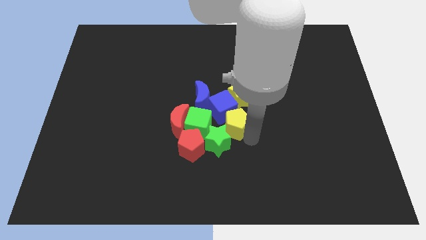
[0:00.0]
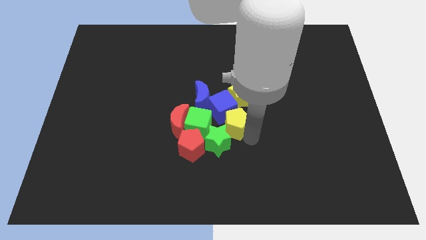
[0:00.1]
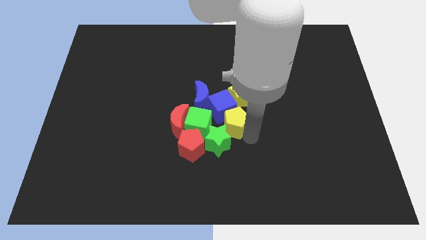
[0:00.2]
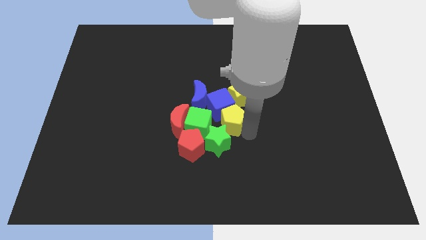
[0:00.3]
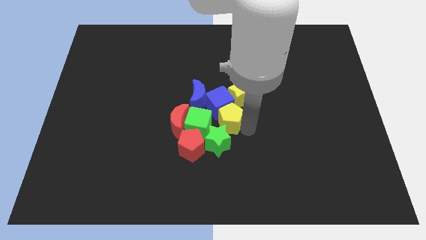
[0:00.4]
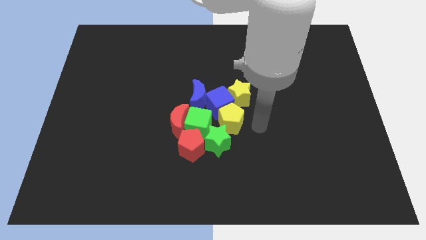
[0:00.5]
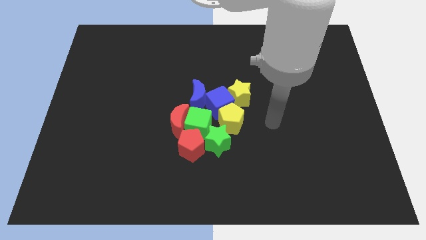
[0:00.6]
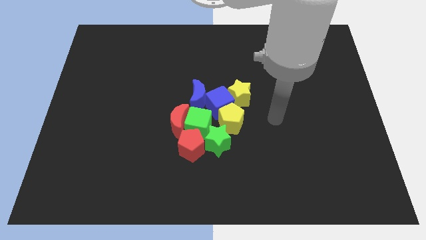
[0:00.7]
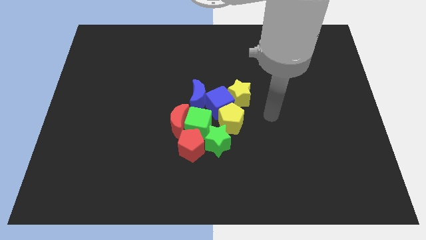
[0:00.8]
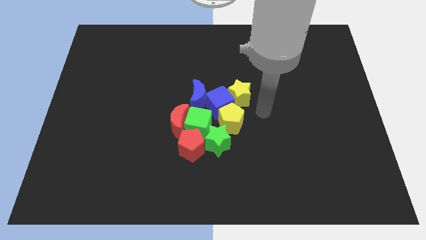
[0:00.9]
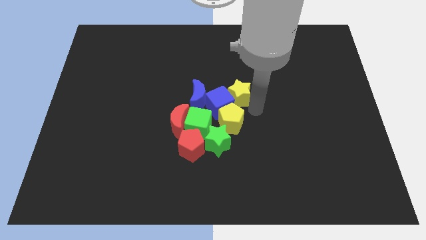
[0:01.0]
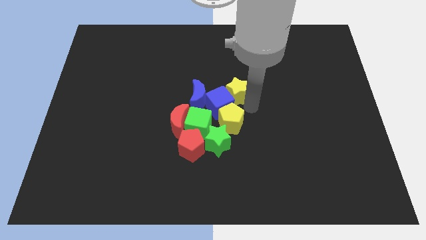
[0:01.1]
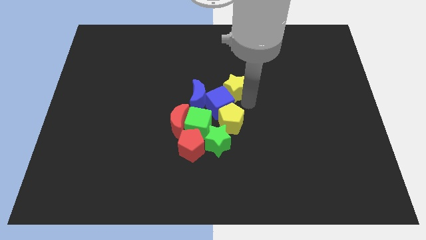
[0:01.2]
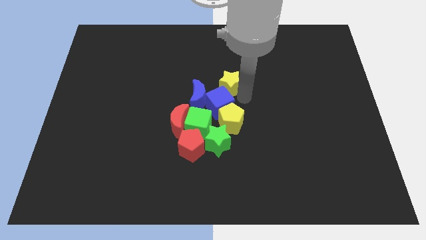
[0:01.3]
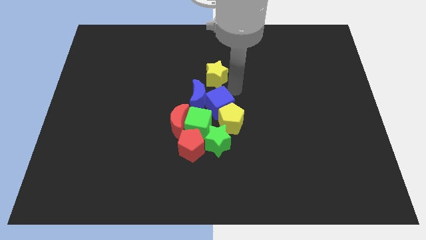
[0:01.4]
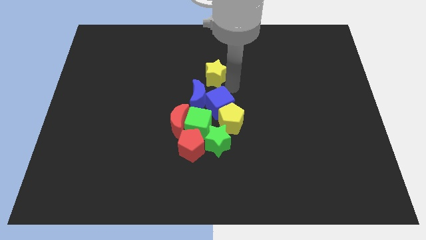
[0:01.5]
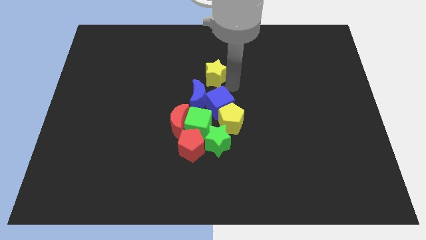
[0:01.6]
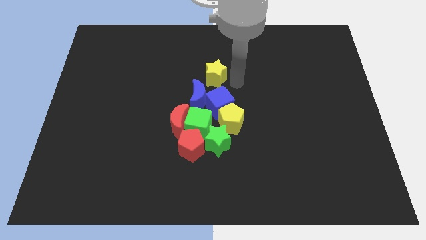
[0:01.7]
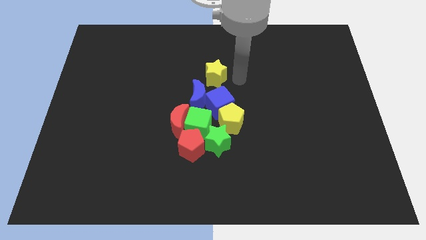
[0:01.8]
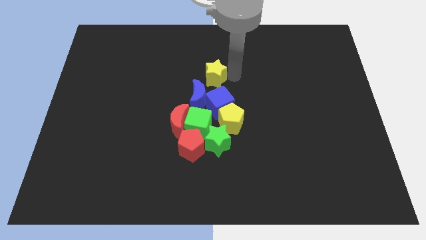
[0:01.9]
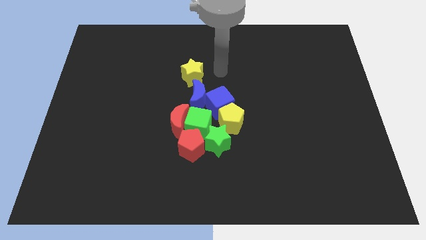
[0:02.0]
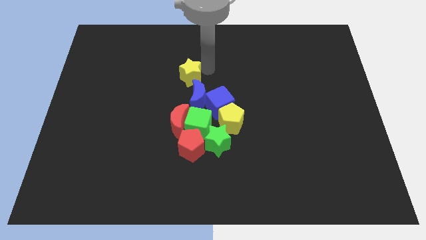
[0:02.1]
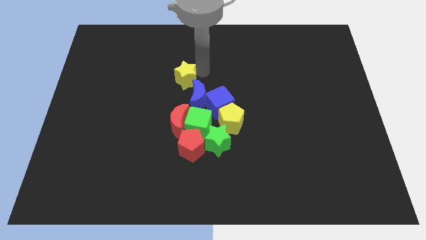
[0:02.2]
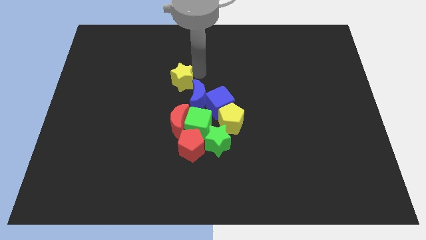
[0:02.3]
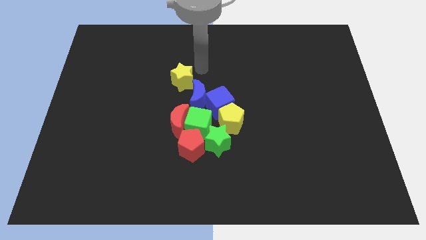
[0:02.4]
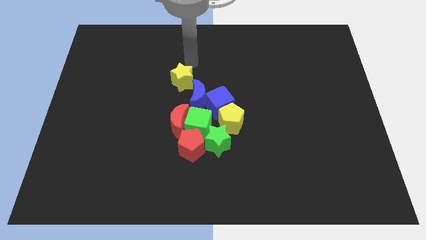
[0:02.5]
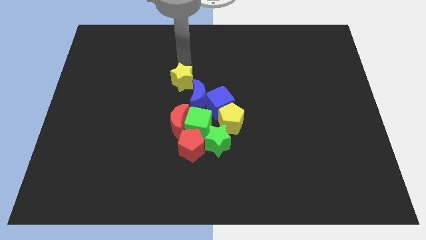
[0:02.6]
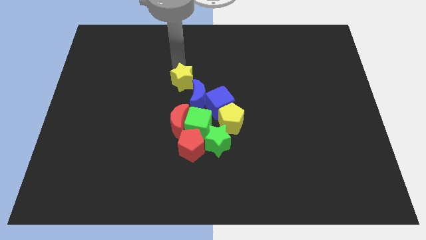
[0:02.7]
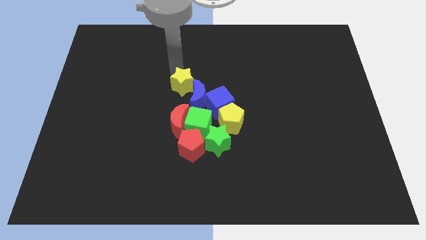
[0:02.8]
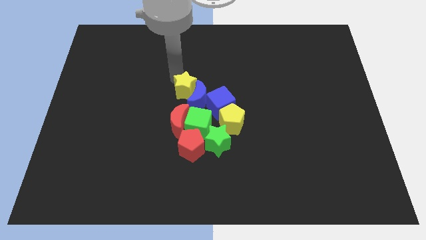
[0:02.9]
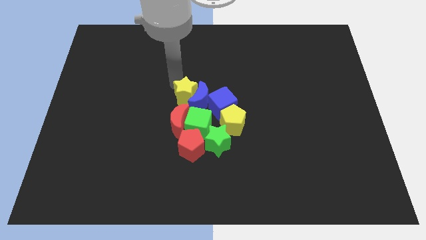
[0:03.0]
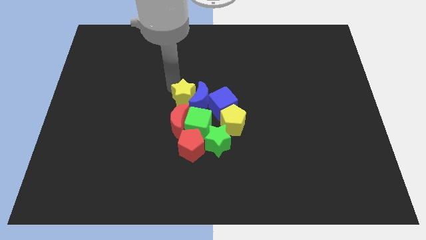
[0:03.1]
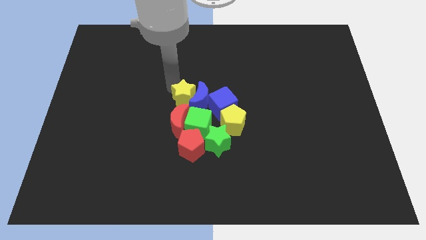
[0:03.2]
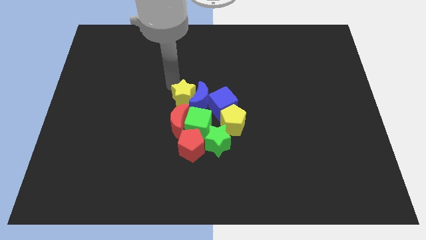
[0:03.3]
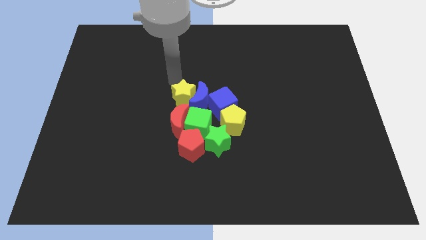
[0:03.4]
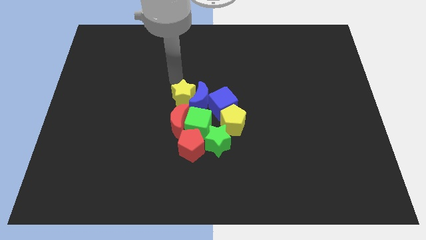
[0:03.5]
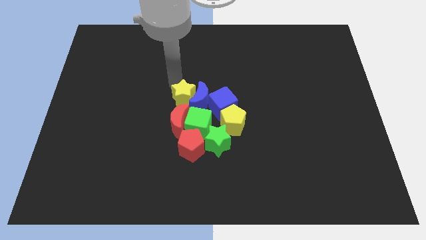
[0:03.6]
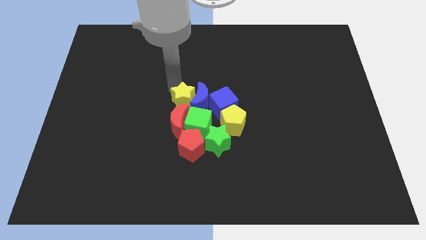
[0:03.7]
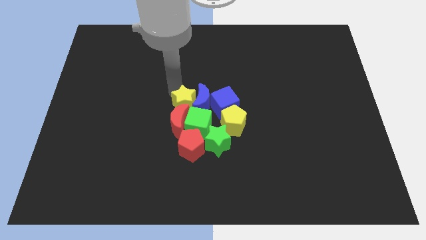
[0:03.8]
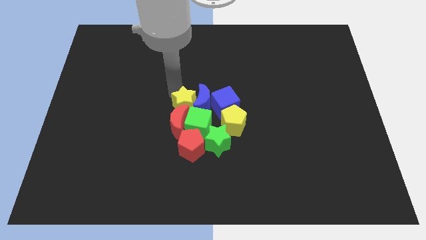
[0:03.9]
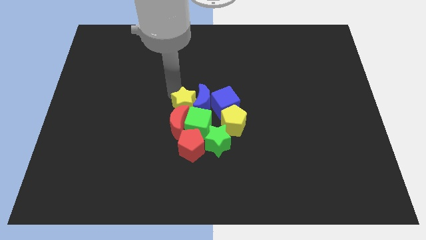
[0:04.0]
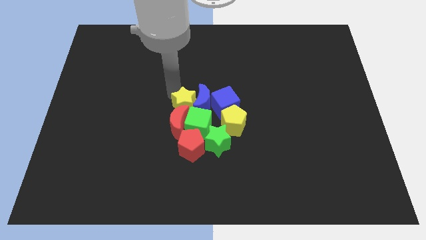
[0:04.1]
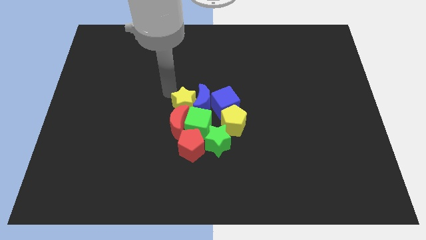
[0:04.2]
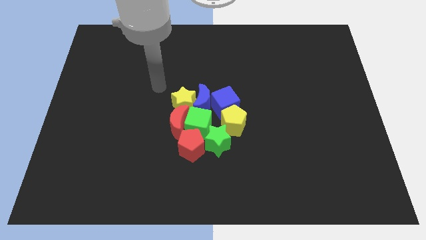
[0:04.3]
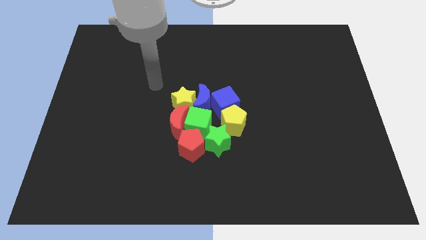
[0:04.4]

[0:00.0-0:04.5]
place yellow star left to blue crescent

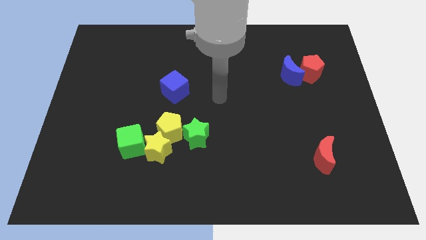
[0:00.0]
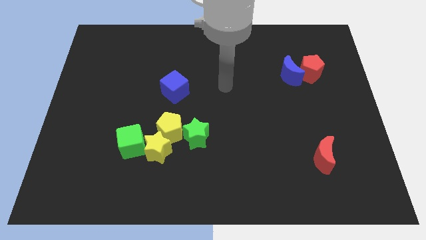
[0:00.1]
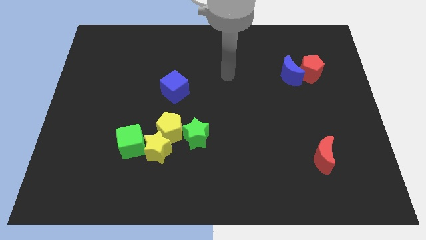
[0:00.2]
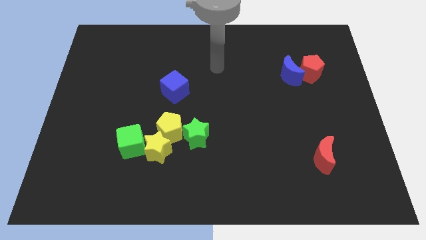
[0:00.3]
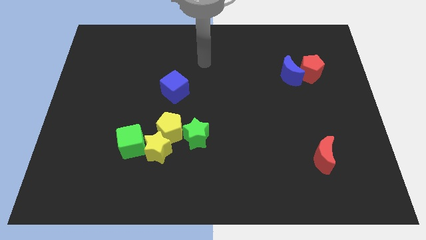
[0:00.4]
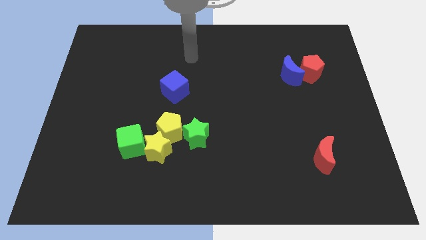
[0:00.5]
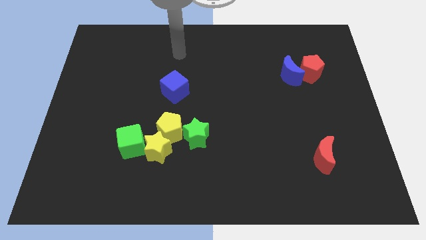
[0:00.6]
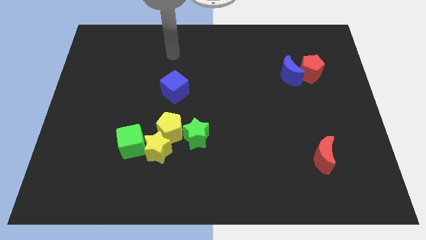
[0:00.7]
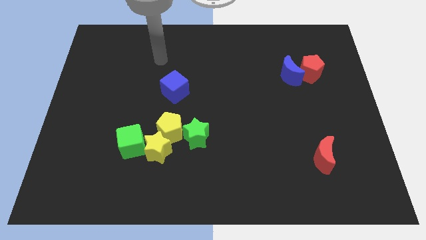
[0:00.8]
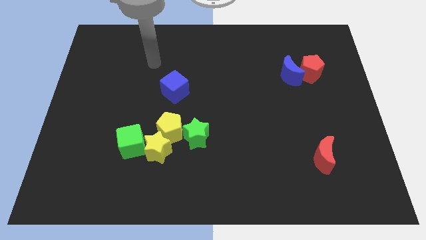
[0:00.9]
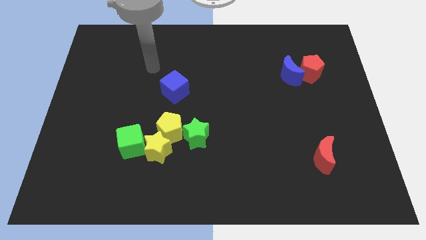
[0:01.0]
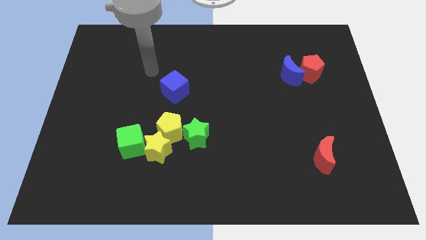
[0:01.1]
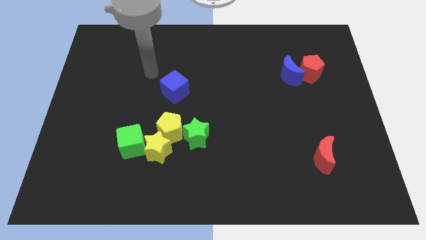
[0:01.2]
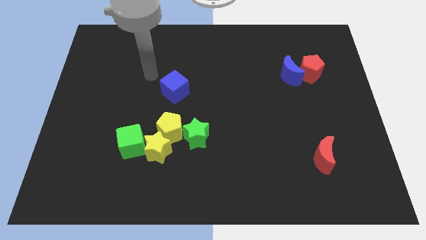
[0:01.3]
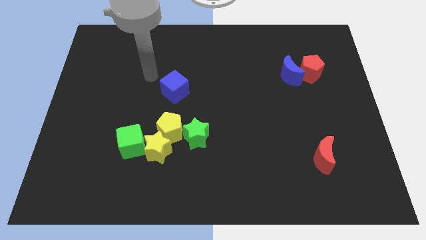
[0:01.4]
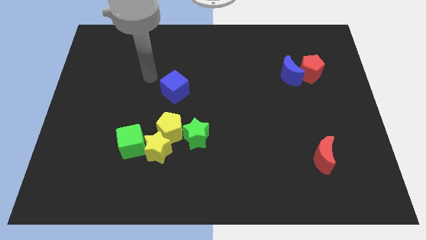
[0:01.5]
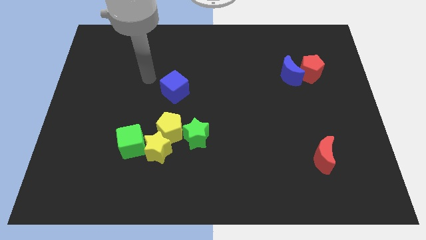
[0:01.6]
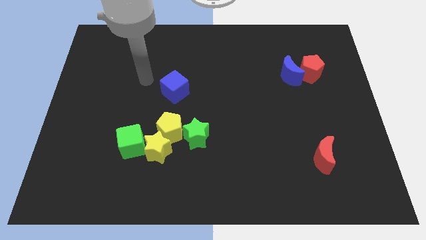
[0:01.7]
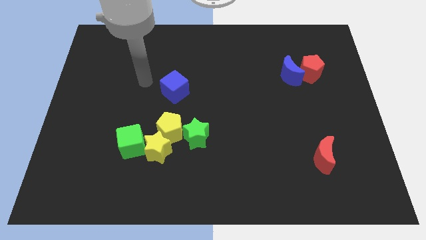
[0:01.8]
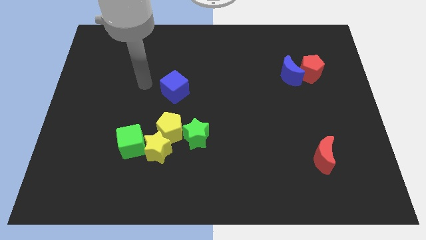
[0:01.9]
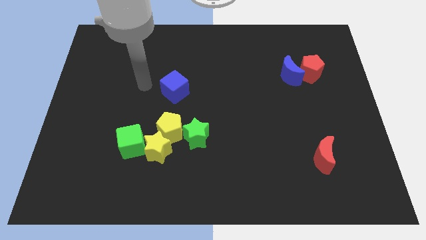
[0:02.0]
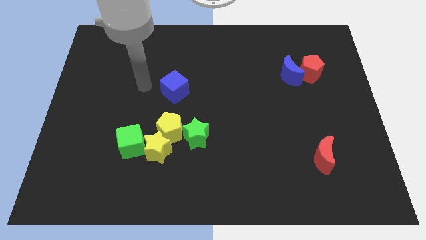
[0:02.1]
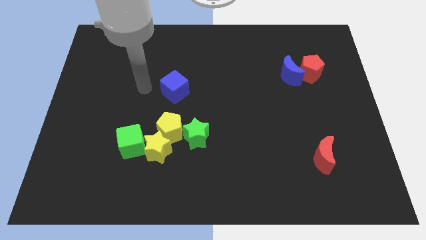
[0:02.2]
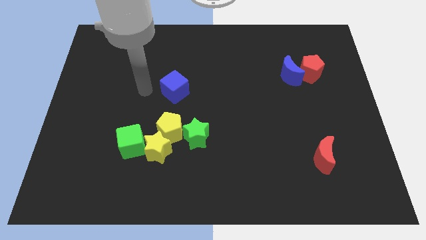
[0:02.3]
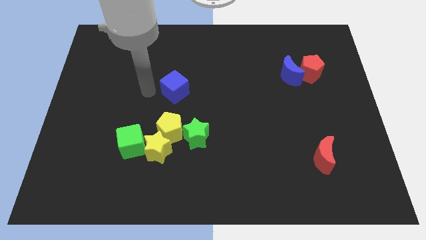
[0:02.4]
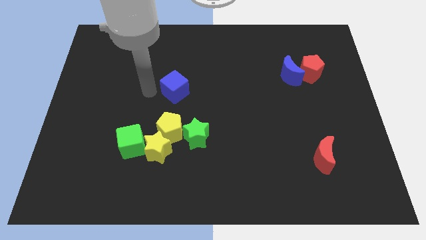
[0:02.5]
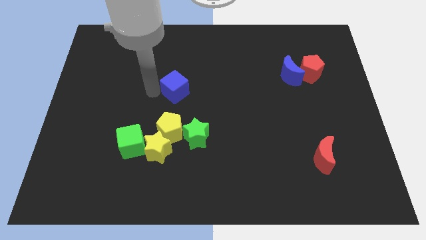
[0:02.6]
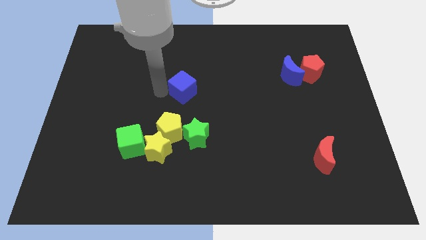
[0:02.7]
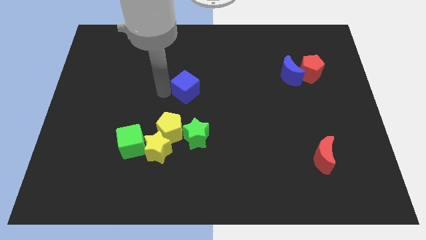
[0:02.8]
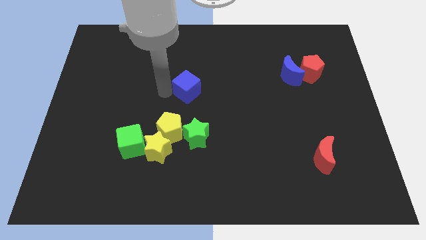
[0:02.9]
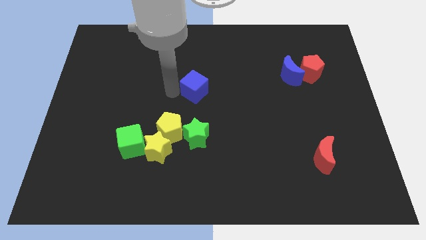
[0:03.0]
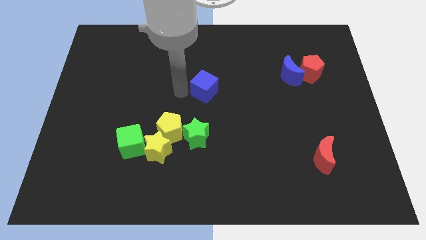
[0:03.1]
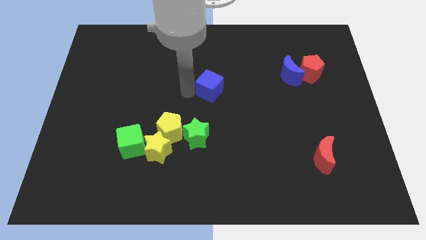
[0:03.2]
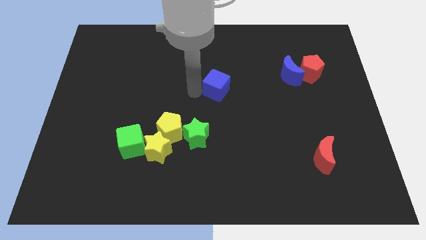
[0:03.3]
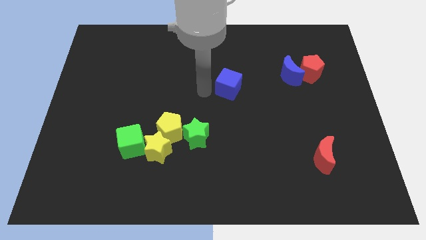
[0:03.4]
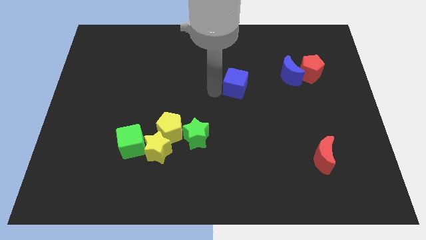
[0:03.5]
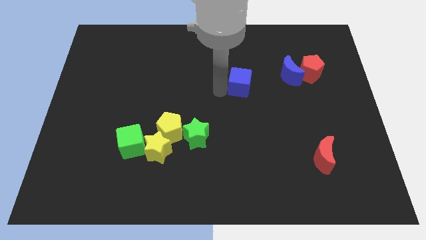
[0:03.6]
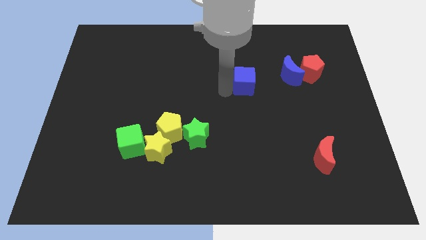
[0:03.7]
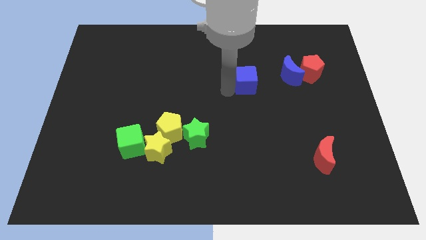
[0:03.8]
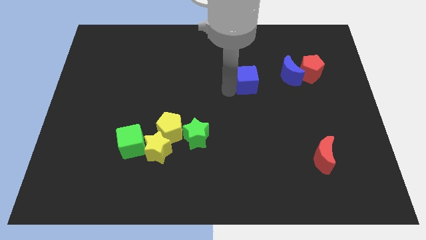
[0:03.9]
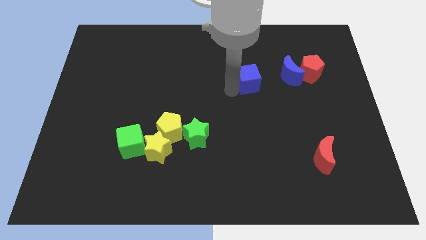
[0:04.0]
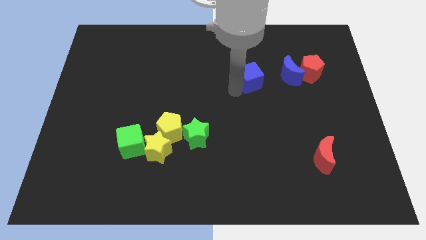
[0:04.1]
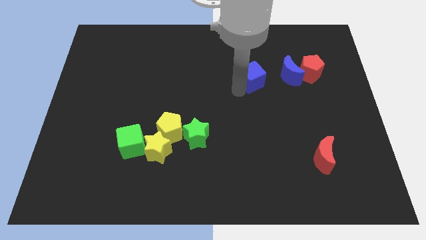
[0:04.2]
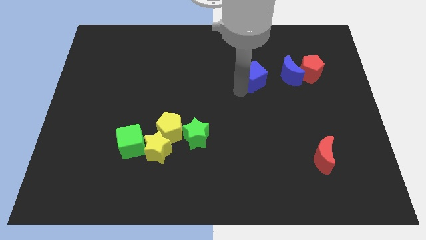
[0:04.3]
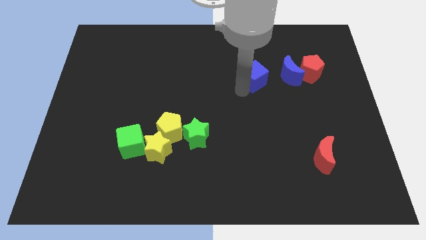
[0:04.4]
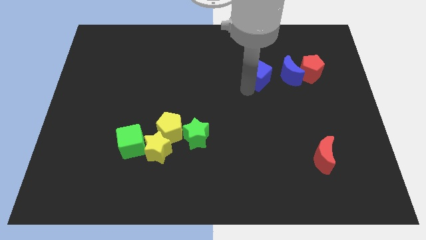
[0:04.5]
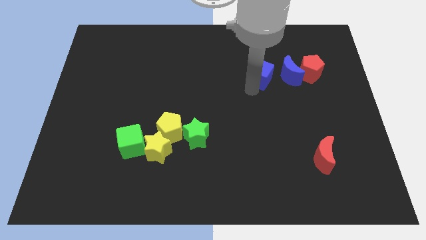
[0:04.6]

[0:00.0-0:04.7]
push the blue cube towards the blue moon

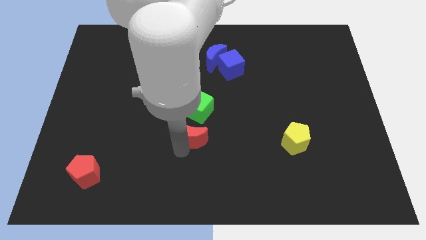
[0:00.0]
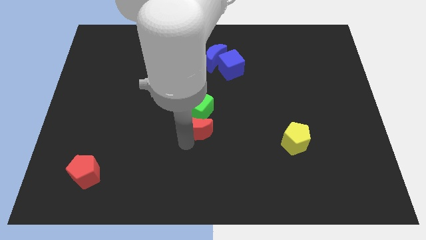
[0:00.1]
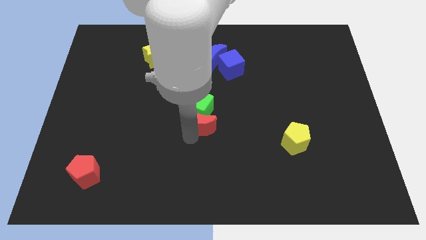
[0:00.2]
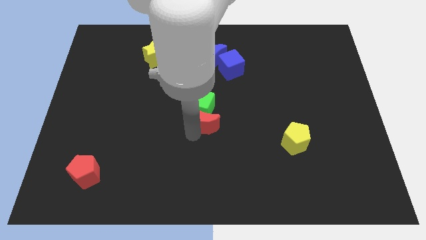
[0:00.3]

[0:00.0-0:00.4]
push the red crescent into the green cube
